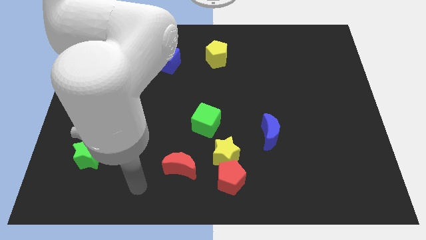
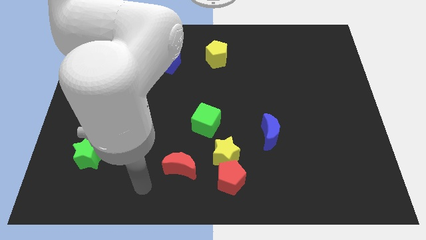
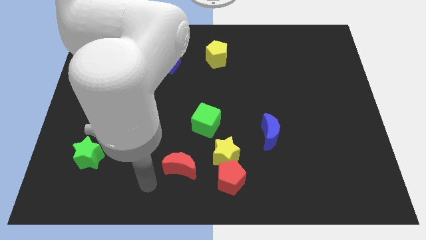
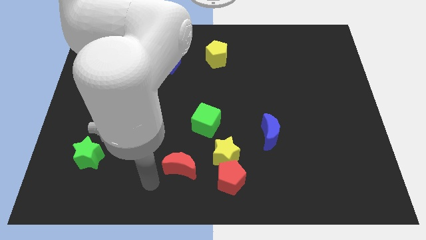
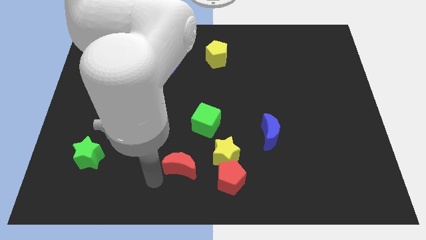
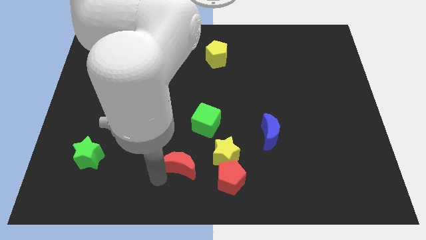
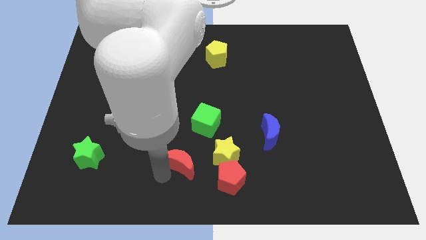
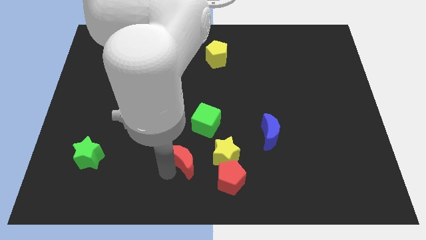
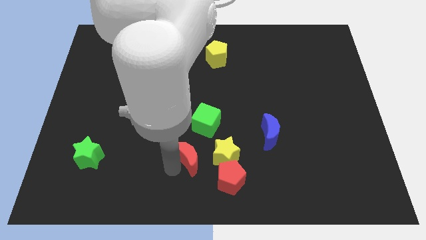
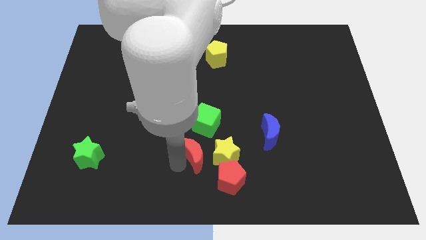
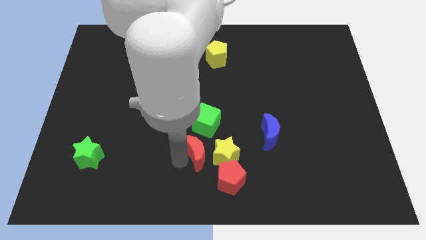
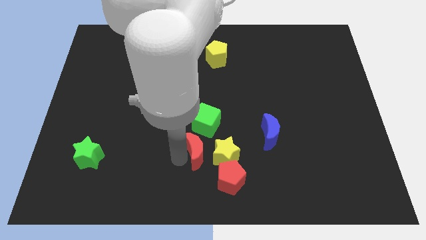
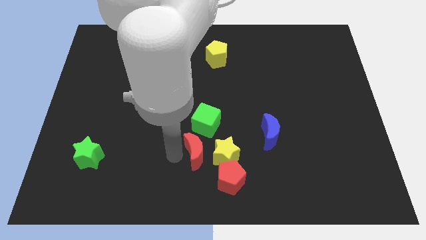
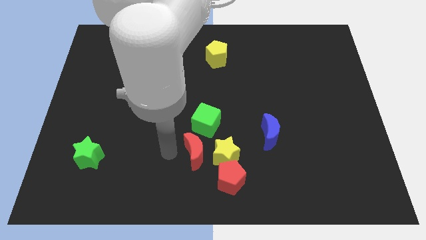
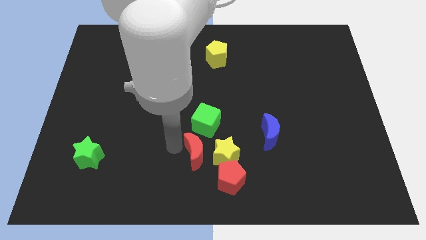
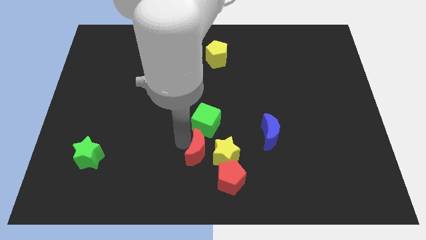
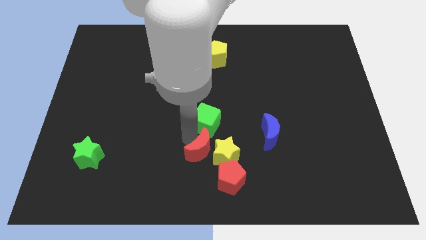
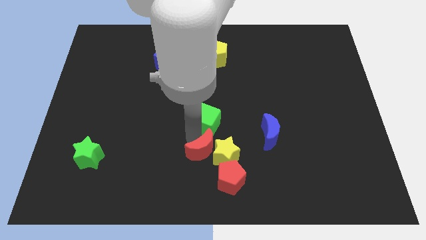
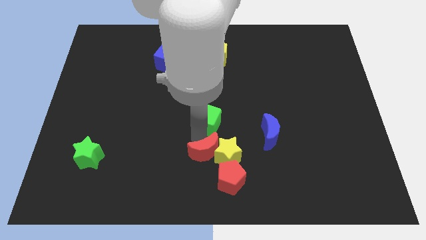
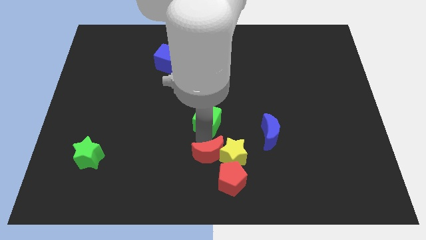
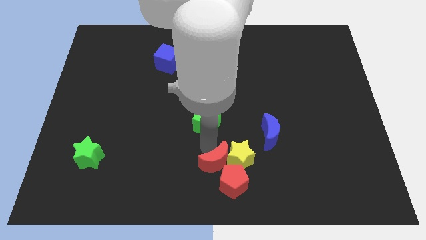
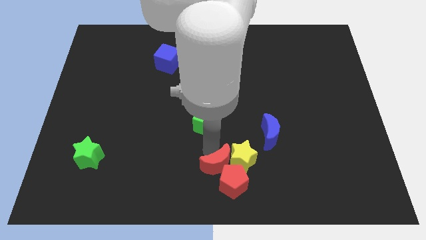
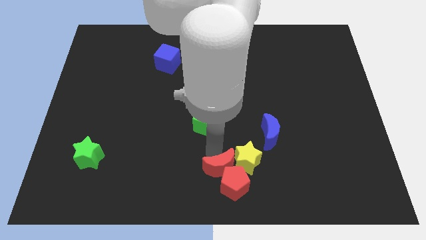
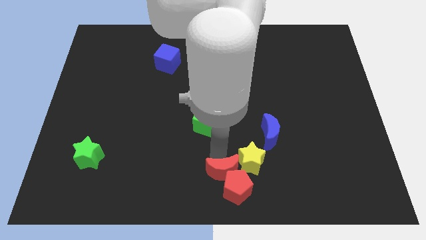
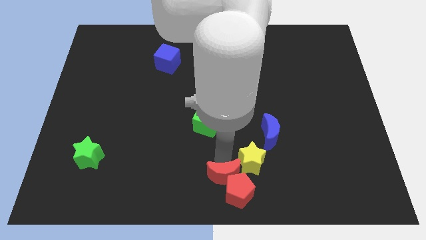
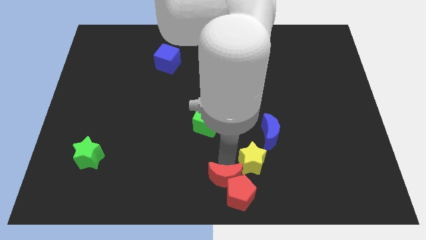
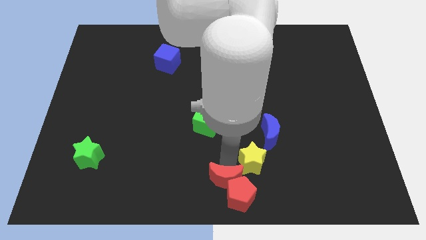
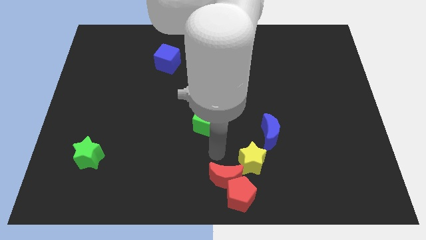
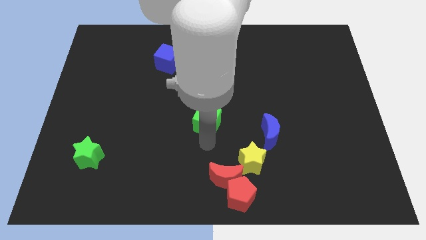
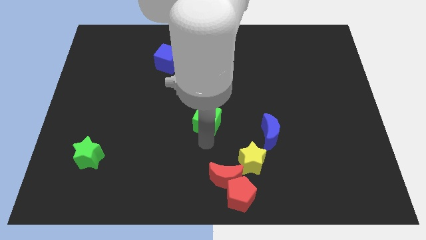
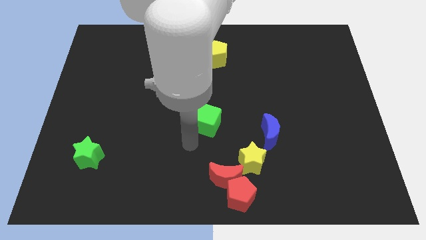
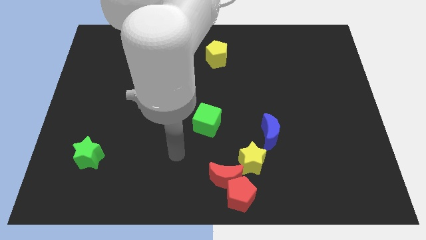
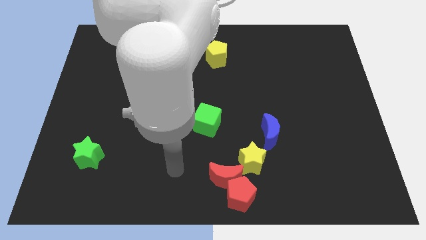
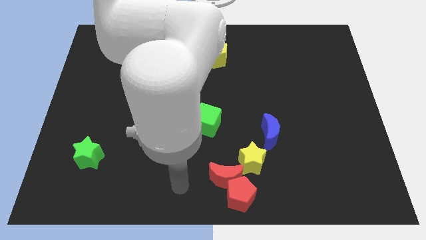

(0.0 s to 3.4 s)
move the red moon into red pentagon

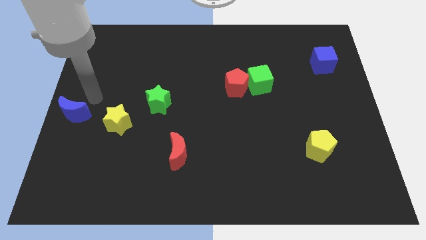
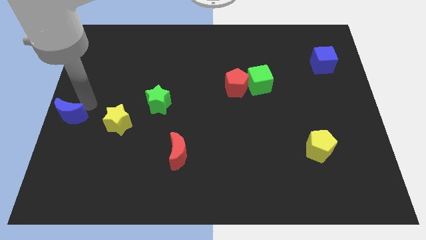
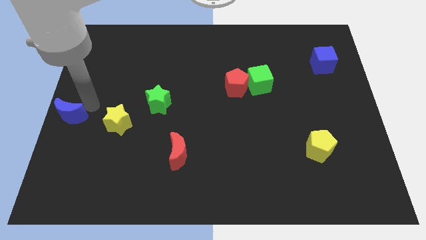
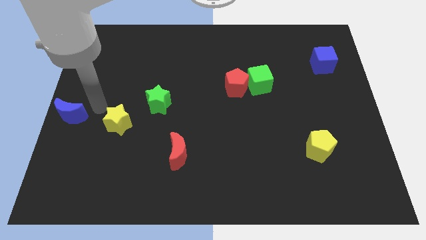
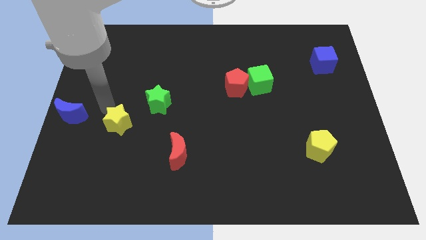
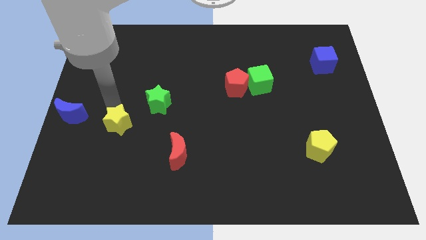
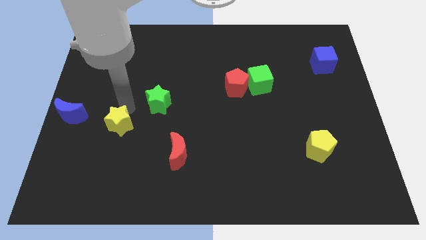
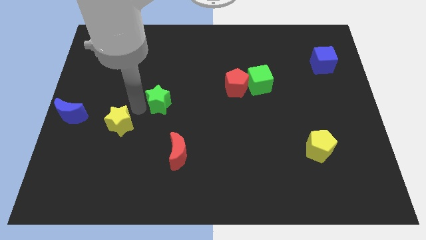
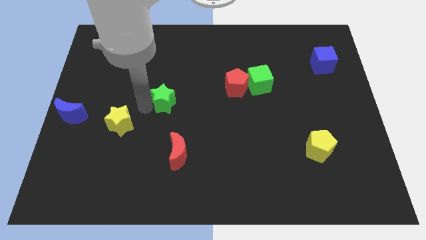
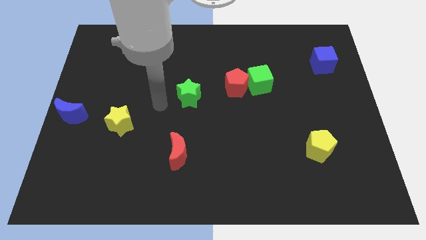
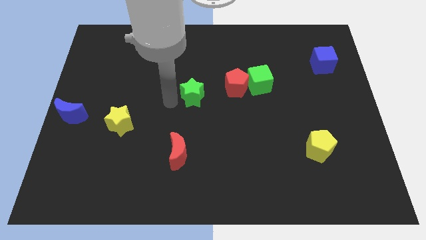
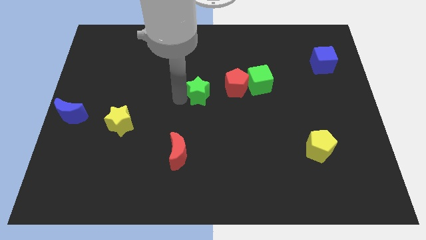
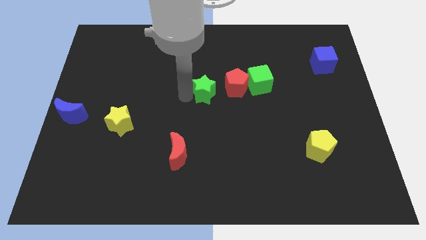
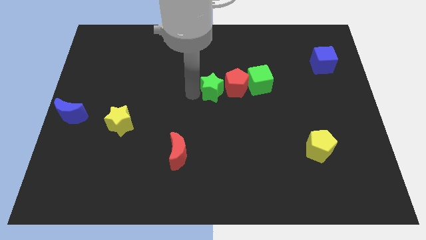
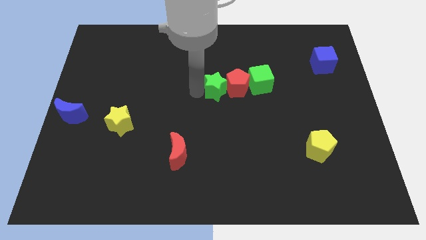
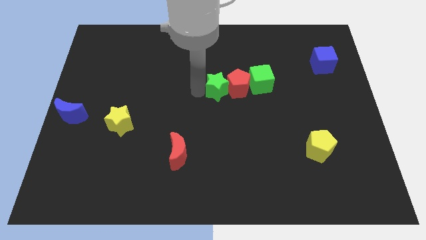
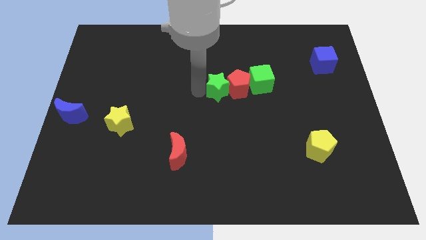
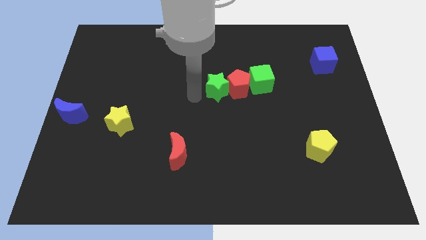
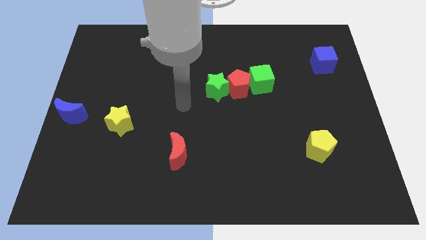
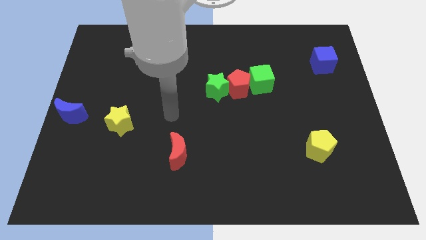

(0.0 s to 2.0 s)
push the green star into the red pentagon

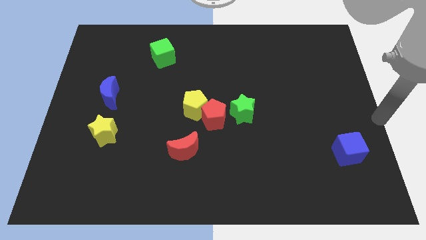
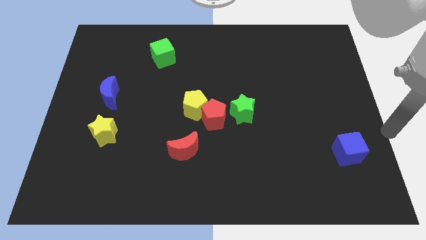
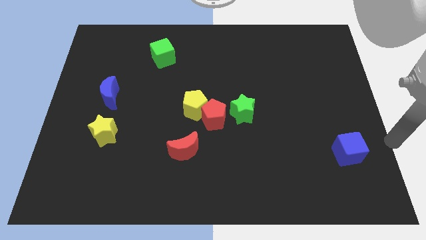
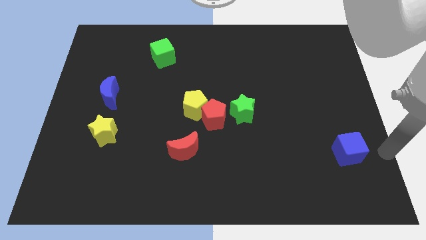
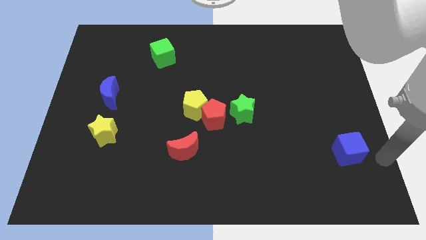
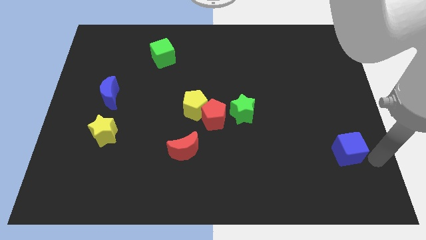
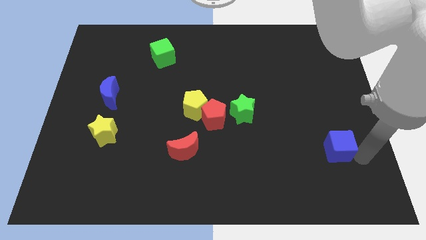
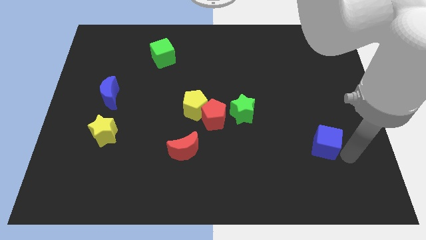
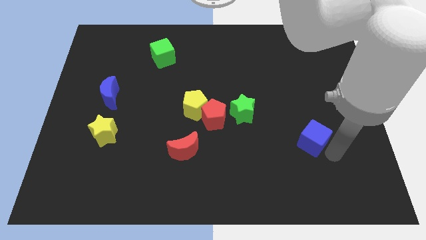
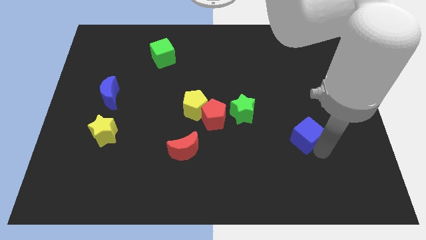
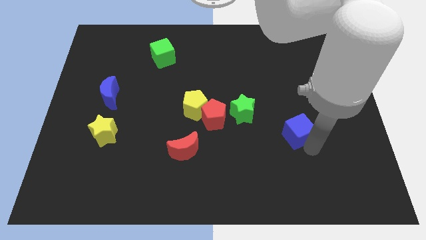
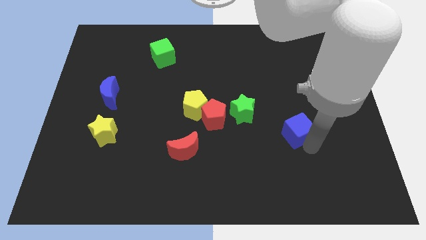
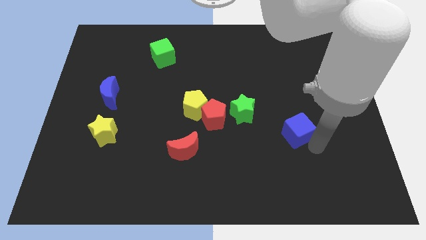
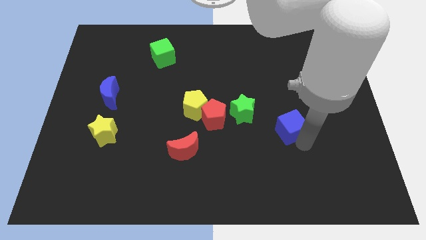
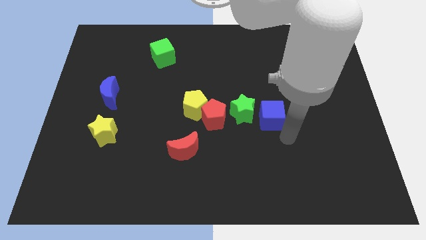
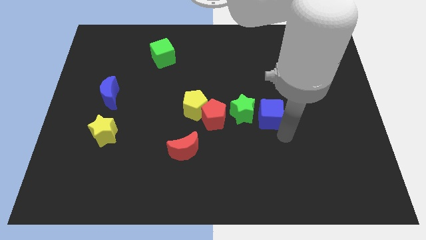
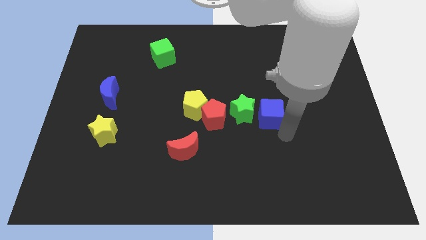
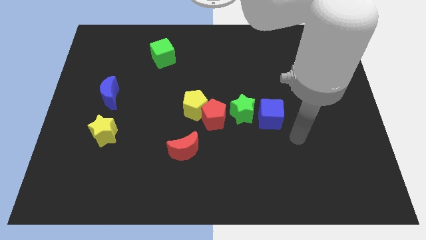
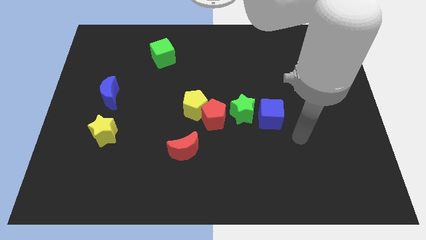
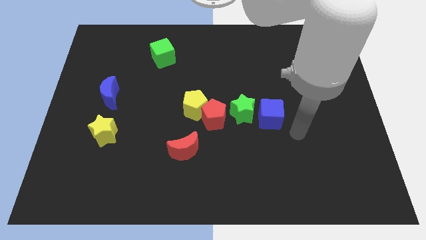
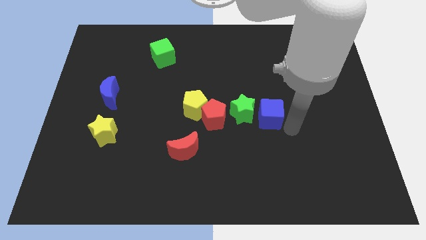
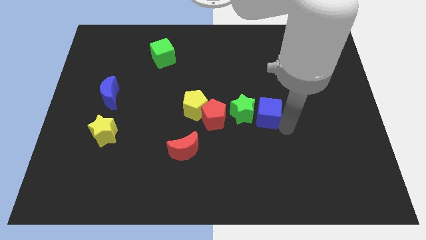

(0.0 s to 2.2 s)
place the blue cube to the right of green star

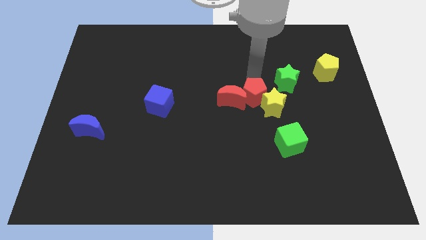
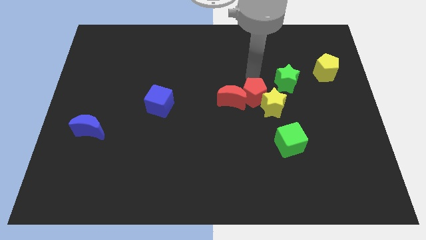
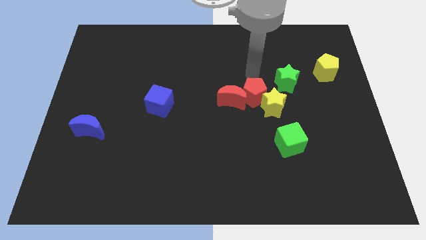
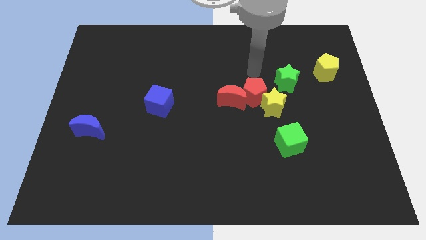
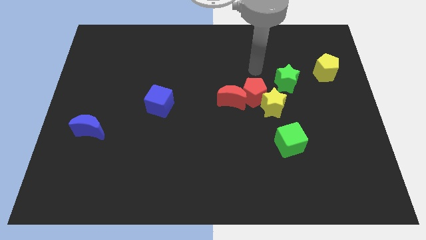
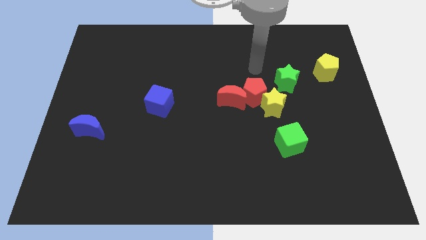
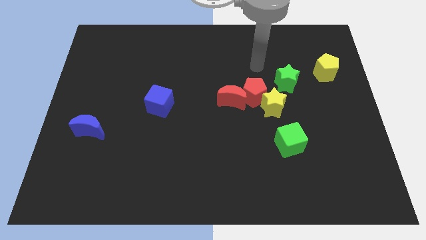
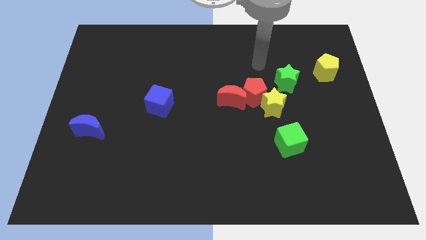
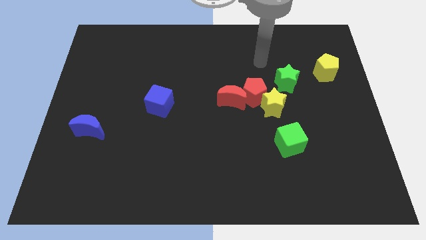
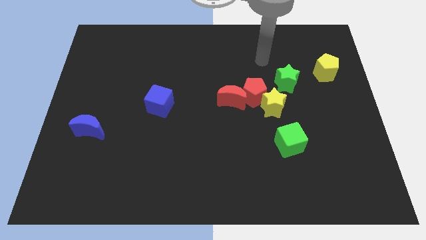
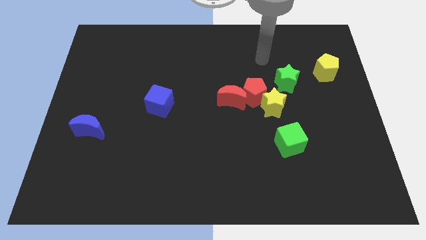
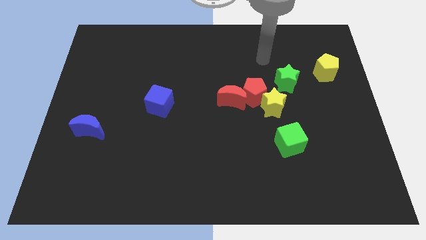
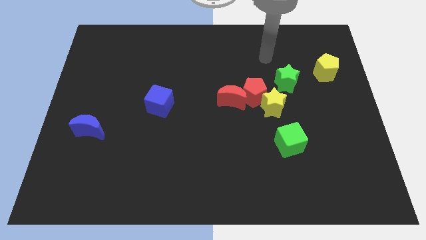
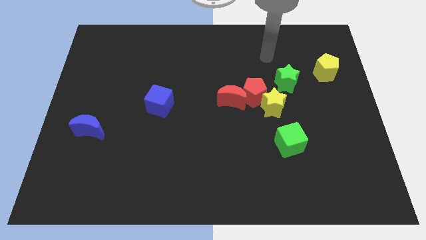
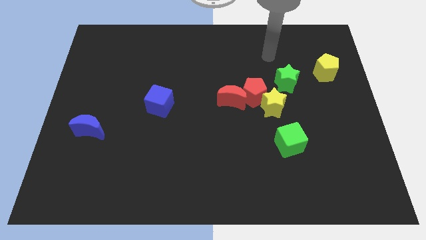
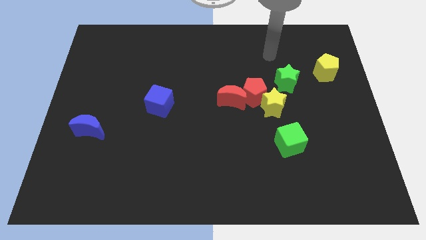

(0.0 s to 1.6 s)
move your hand away from the red pentagon
